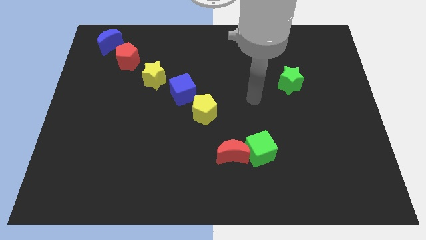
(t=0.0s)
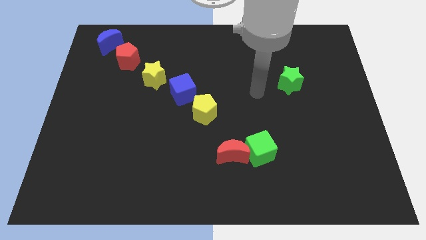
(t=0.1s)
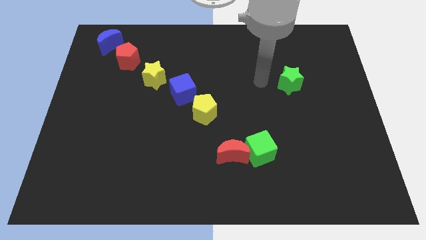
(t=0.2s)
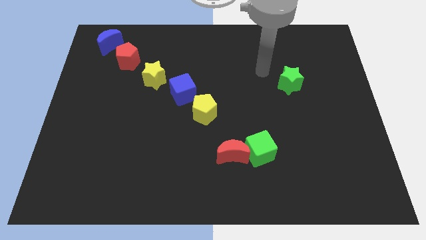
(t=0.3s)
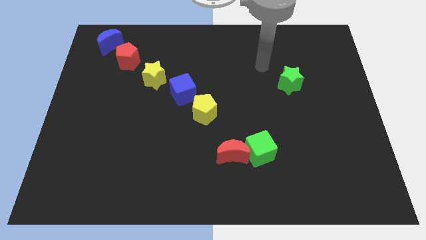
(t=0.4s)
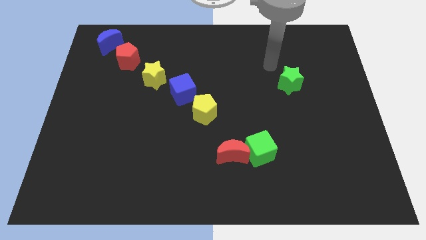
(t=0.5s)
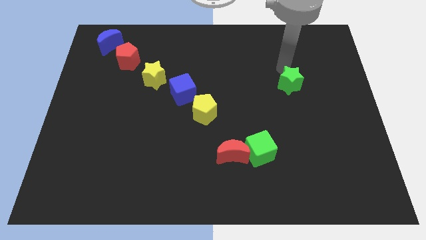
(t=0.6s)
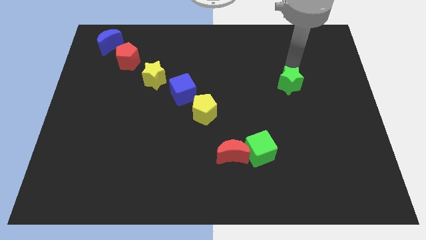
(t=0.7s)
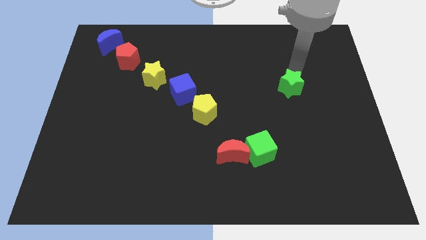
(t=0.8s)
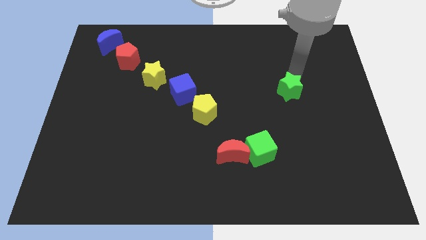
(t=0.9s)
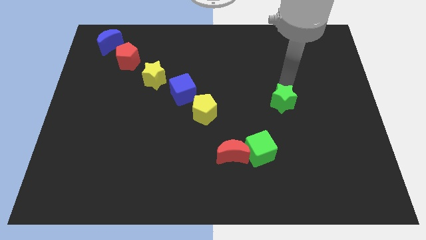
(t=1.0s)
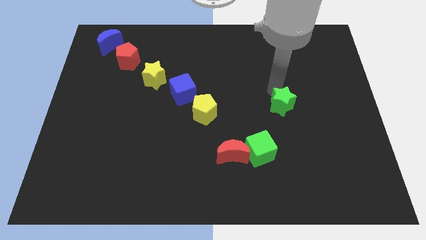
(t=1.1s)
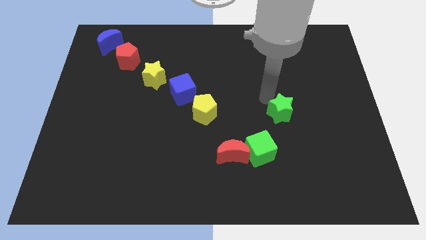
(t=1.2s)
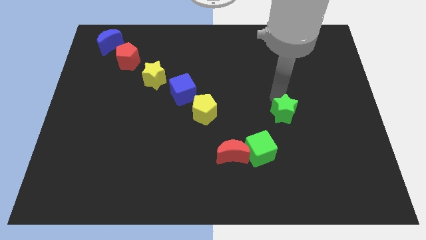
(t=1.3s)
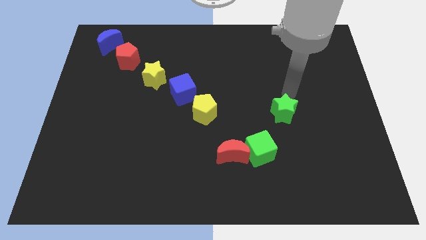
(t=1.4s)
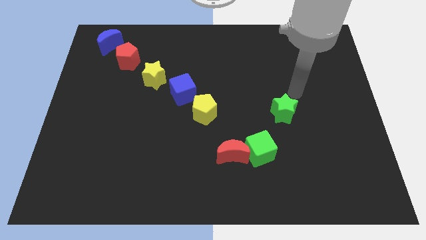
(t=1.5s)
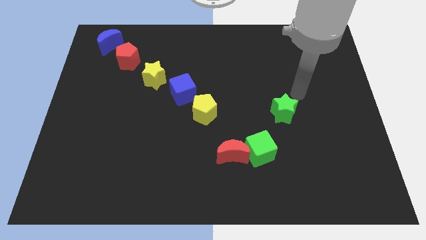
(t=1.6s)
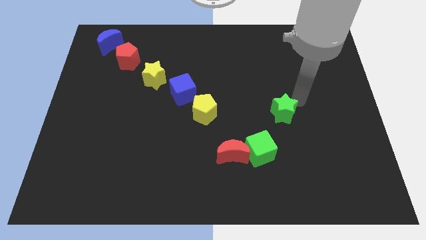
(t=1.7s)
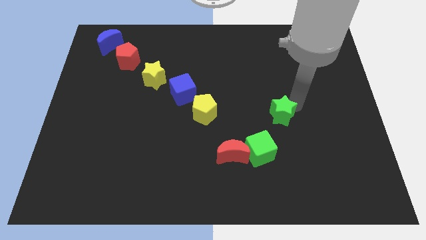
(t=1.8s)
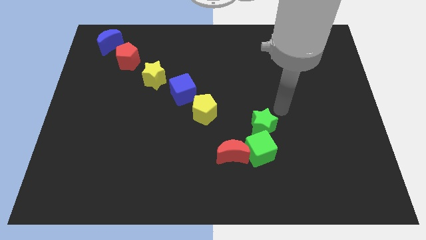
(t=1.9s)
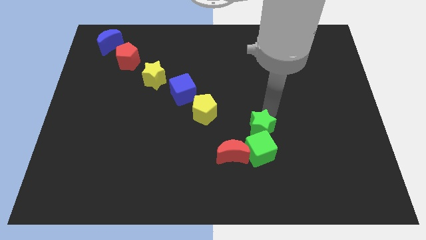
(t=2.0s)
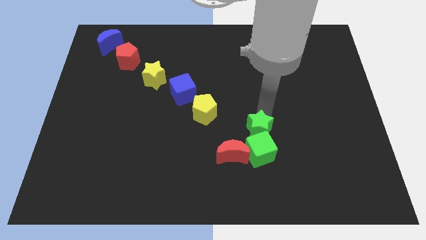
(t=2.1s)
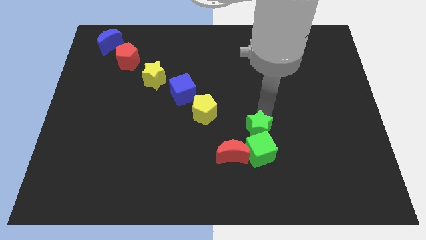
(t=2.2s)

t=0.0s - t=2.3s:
push green star into green cube

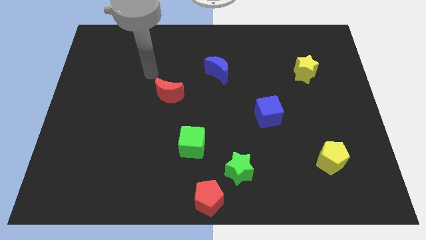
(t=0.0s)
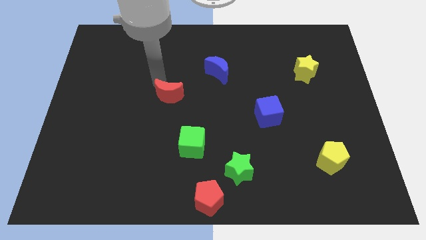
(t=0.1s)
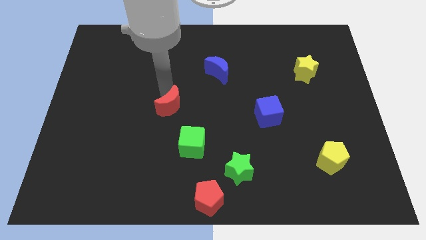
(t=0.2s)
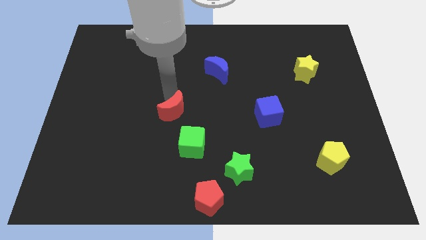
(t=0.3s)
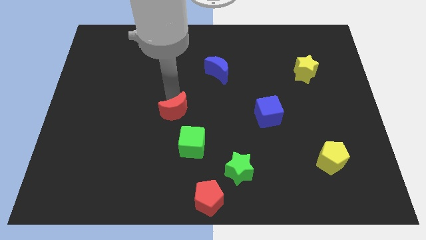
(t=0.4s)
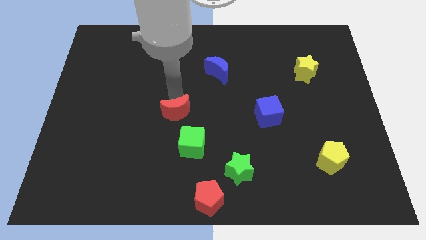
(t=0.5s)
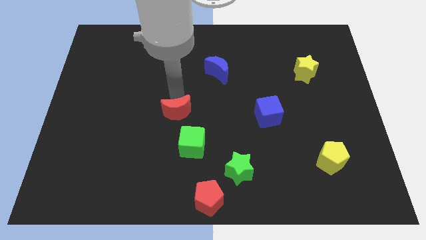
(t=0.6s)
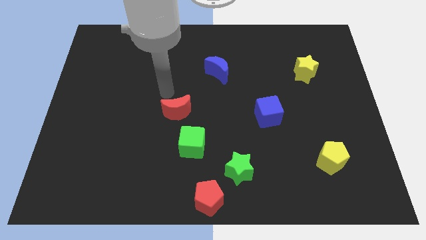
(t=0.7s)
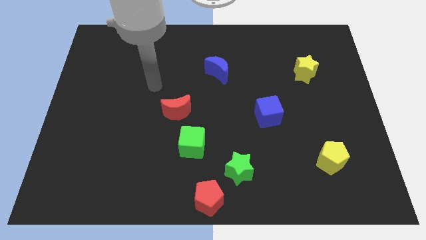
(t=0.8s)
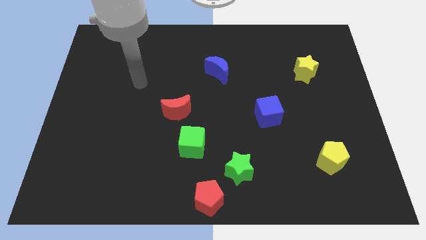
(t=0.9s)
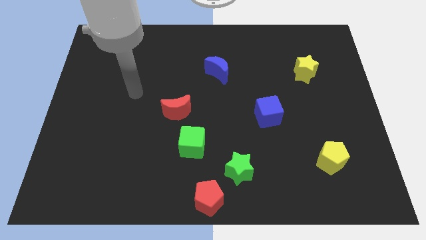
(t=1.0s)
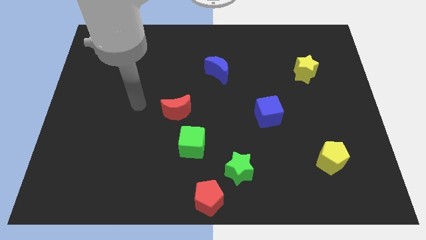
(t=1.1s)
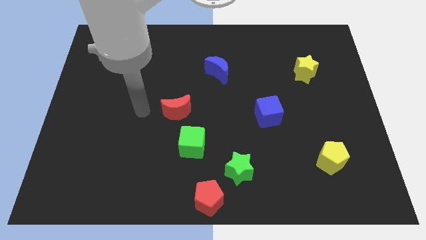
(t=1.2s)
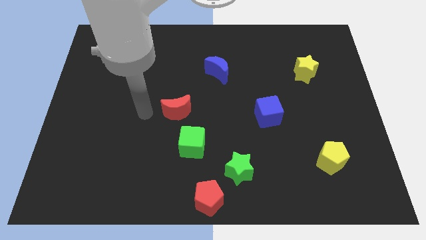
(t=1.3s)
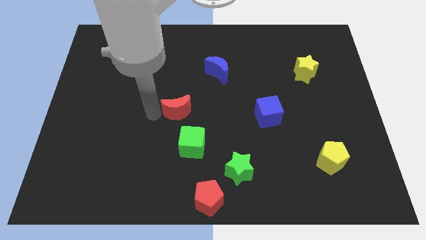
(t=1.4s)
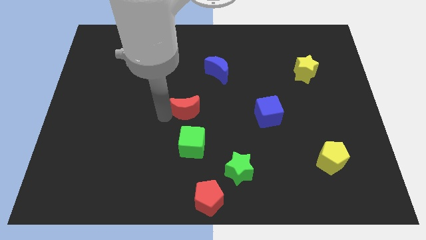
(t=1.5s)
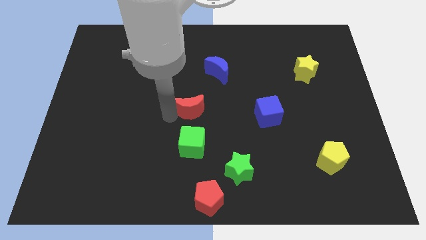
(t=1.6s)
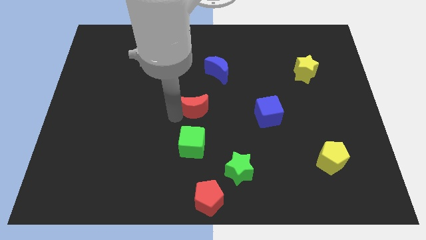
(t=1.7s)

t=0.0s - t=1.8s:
place the red crescent above the green cube

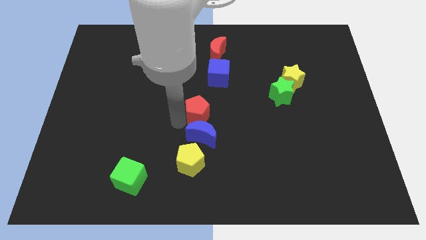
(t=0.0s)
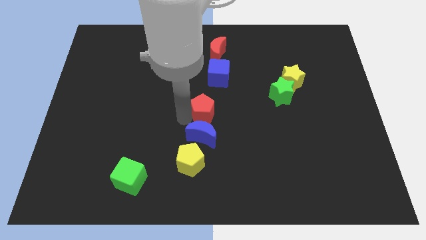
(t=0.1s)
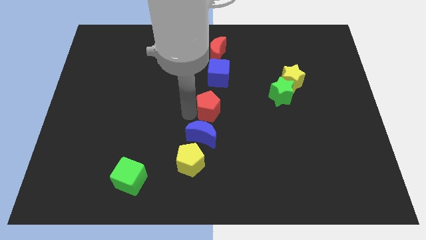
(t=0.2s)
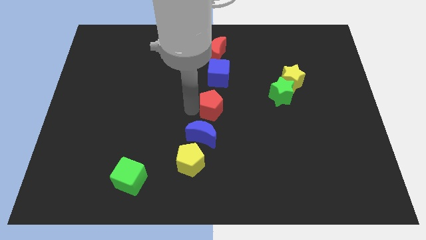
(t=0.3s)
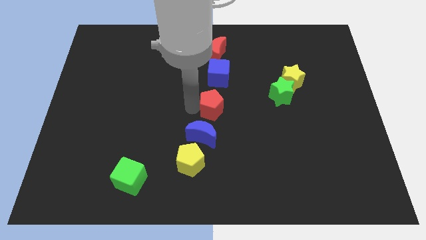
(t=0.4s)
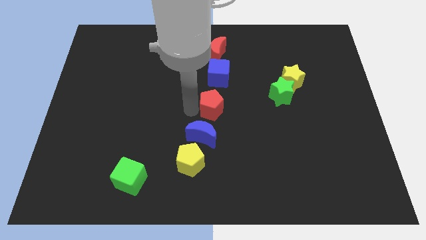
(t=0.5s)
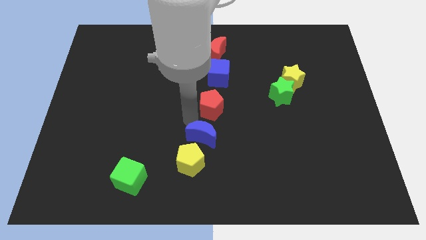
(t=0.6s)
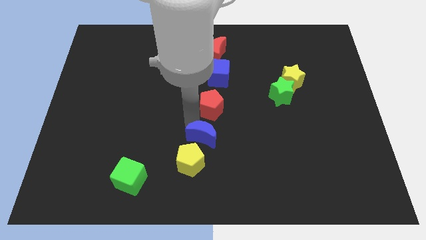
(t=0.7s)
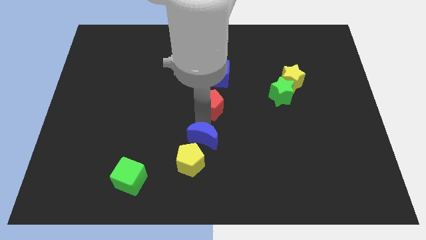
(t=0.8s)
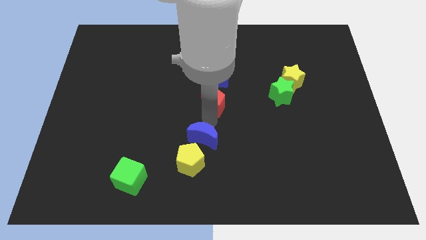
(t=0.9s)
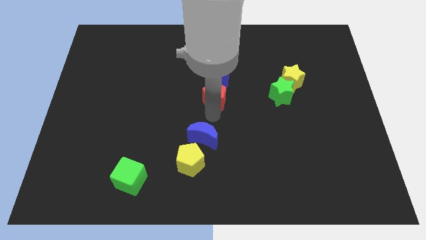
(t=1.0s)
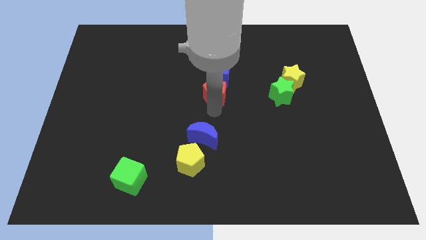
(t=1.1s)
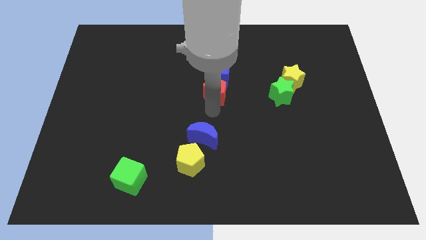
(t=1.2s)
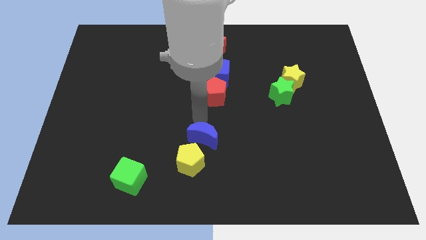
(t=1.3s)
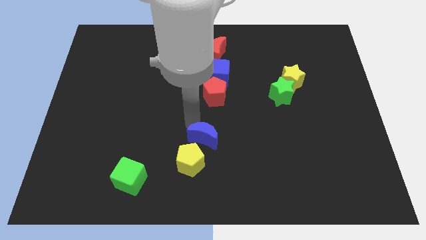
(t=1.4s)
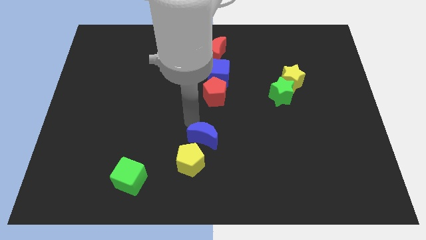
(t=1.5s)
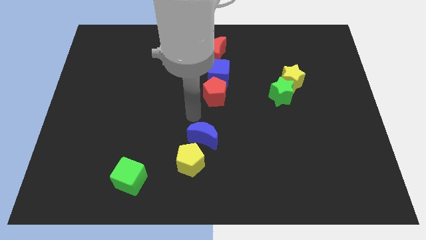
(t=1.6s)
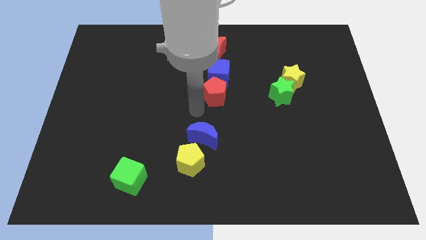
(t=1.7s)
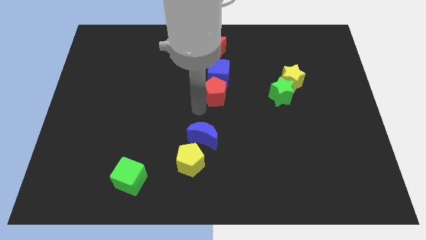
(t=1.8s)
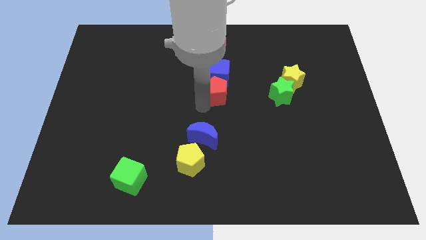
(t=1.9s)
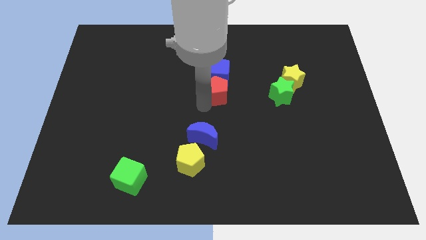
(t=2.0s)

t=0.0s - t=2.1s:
put the red pentagon below the blue moon

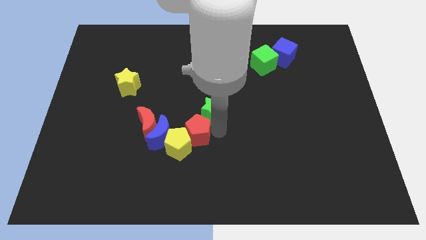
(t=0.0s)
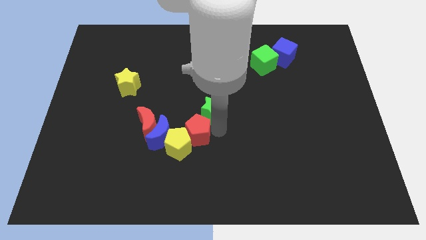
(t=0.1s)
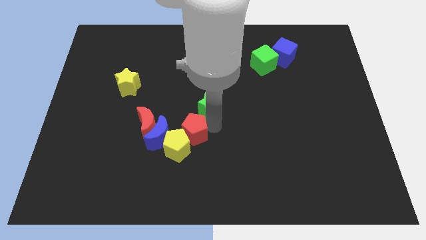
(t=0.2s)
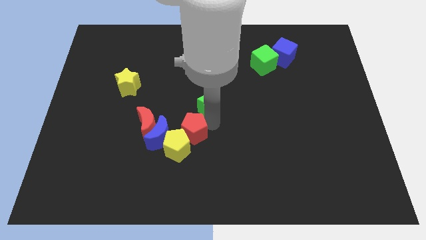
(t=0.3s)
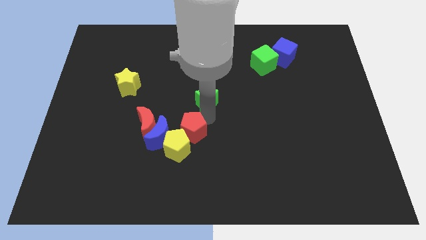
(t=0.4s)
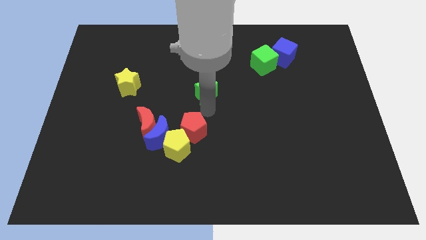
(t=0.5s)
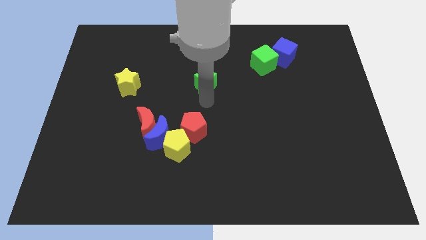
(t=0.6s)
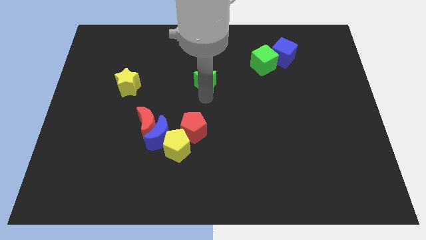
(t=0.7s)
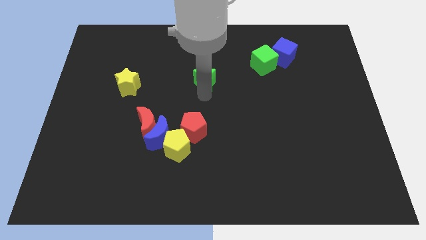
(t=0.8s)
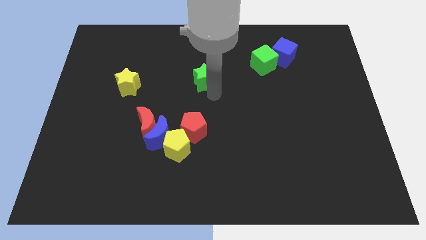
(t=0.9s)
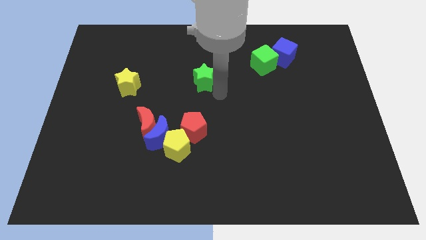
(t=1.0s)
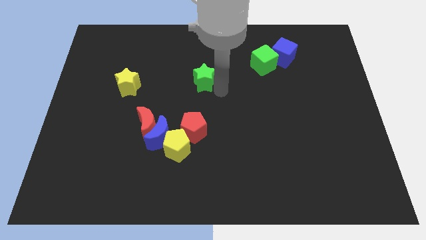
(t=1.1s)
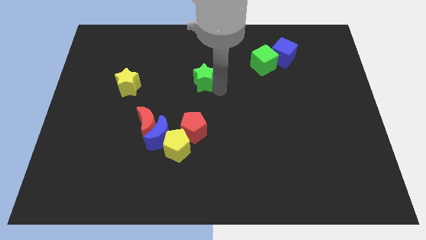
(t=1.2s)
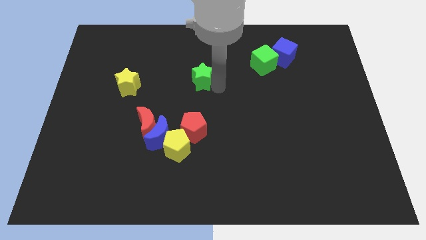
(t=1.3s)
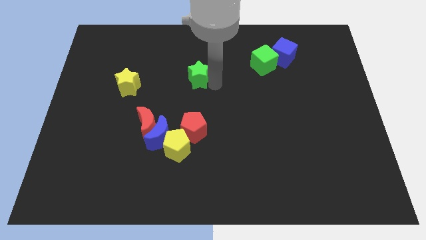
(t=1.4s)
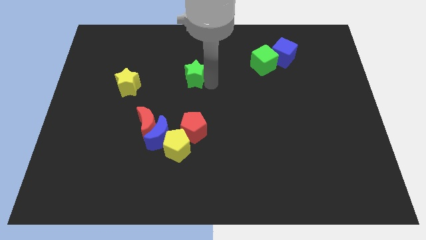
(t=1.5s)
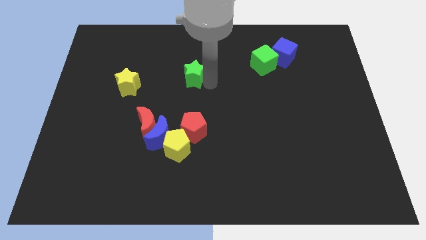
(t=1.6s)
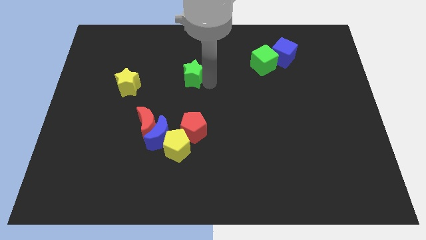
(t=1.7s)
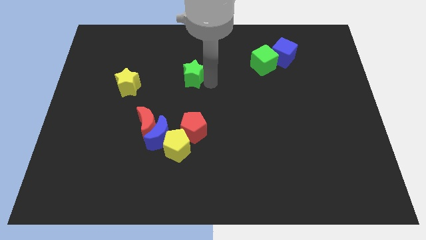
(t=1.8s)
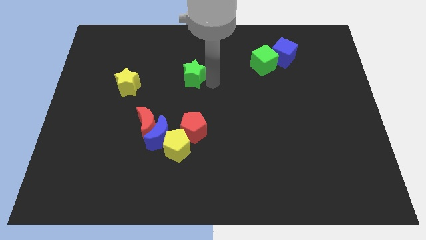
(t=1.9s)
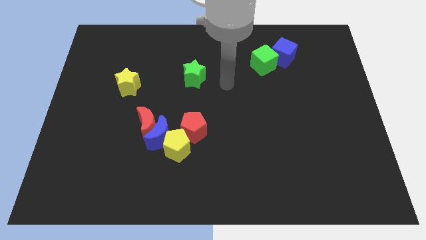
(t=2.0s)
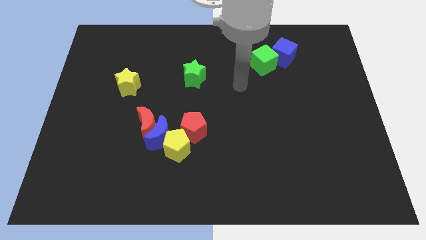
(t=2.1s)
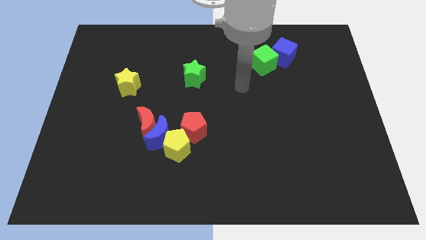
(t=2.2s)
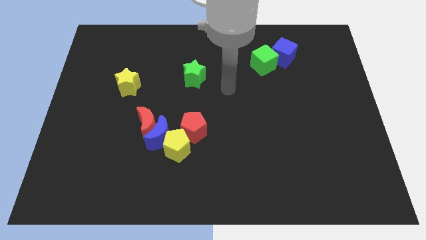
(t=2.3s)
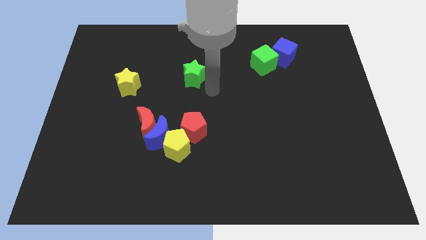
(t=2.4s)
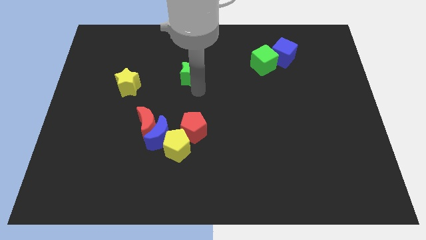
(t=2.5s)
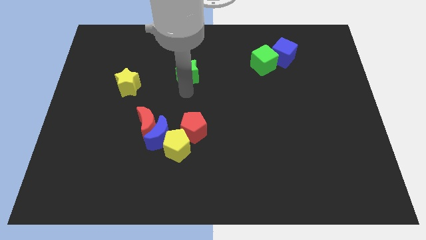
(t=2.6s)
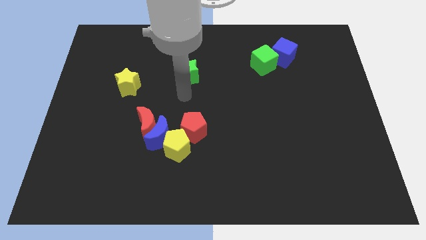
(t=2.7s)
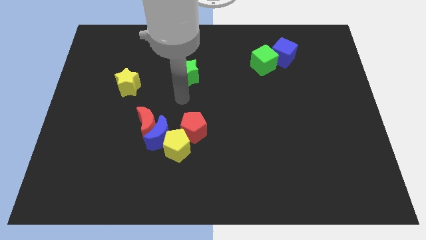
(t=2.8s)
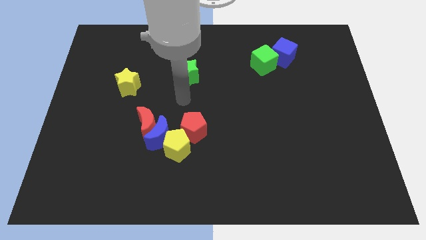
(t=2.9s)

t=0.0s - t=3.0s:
push the green star upward
